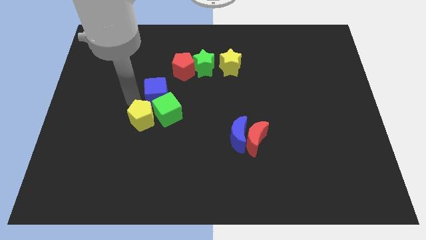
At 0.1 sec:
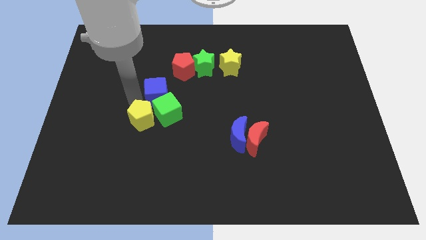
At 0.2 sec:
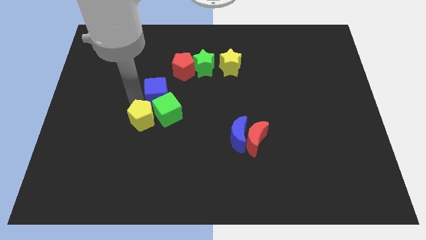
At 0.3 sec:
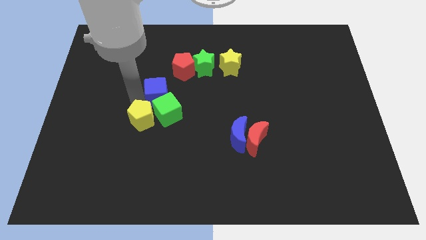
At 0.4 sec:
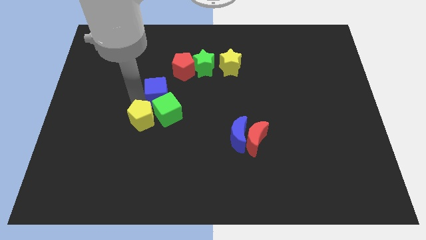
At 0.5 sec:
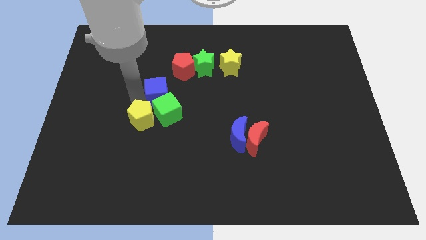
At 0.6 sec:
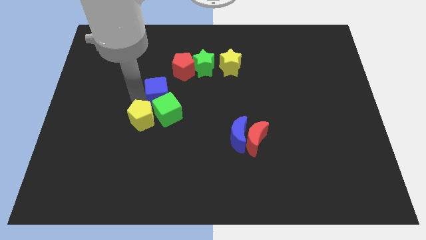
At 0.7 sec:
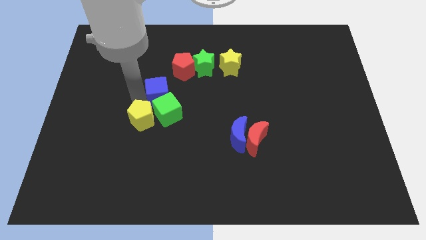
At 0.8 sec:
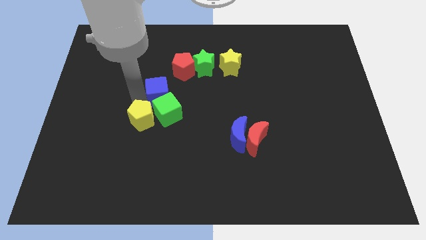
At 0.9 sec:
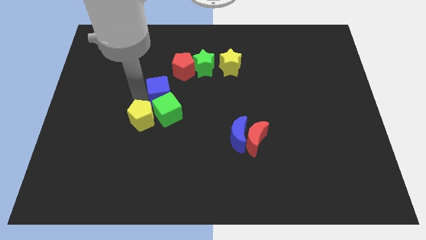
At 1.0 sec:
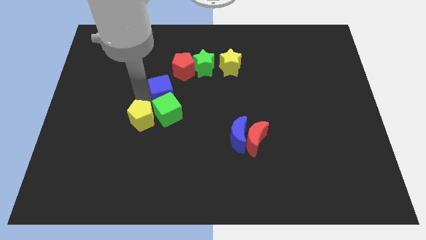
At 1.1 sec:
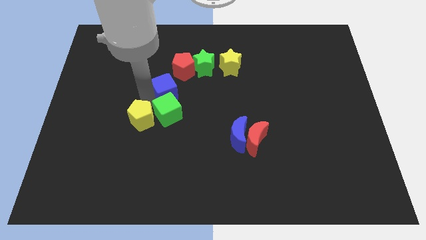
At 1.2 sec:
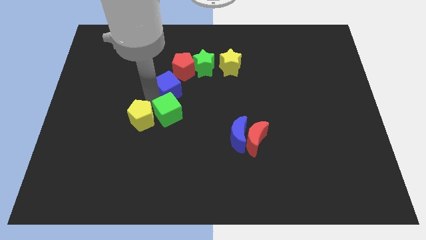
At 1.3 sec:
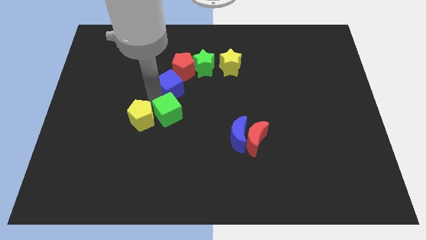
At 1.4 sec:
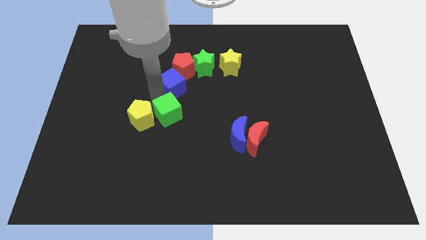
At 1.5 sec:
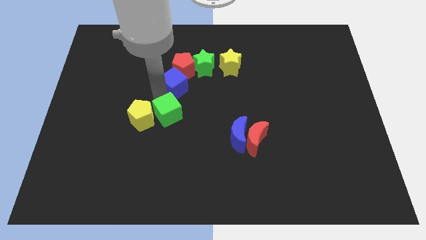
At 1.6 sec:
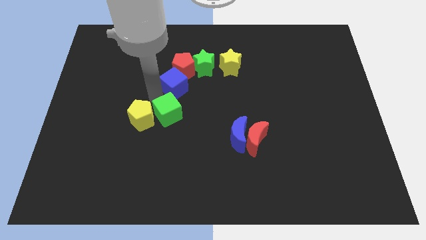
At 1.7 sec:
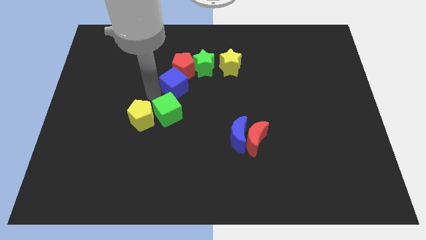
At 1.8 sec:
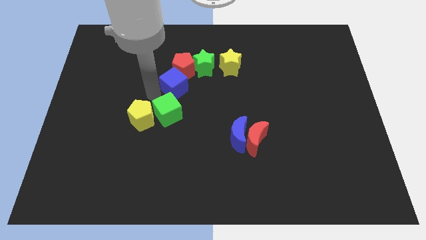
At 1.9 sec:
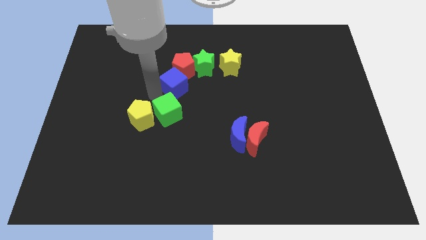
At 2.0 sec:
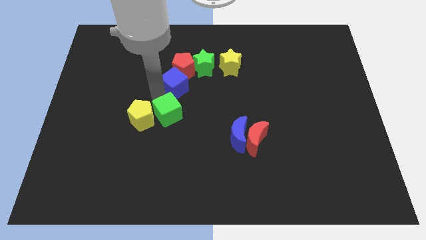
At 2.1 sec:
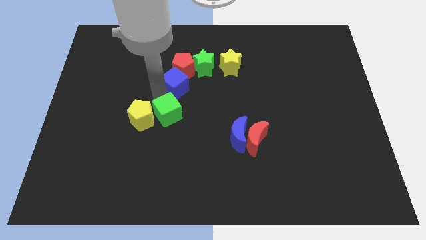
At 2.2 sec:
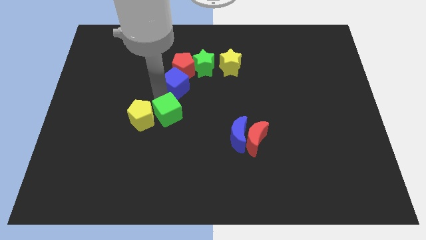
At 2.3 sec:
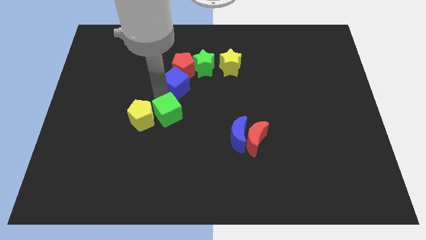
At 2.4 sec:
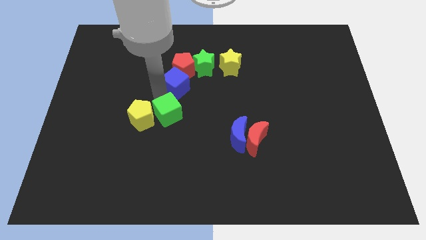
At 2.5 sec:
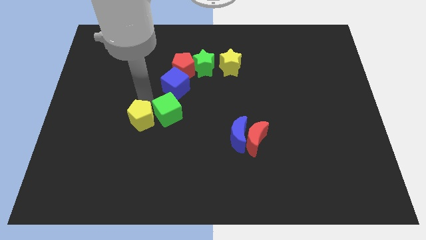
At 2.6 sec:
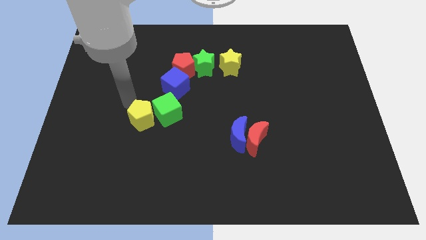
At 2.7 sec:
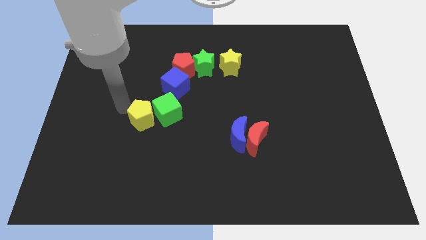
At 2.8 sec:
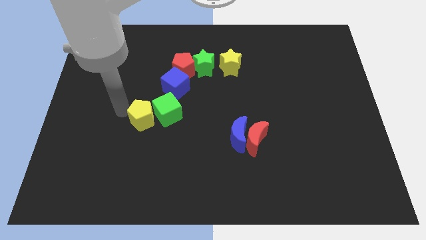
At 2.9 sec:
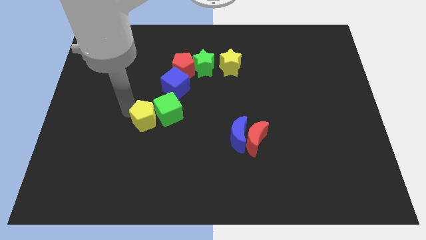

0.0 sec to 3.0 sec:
move the blue cube left below the red pentagon

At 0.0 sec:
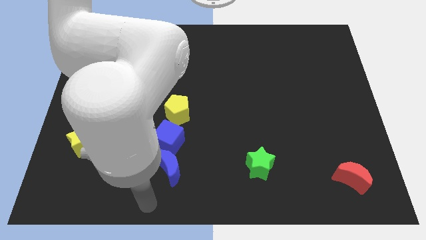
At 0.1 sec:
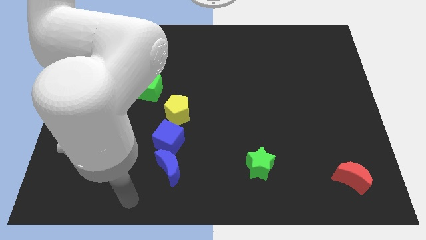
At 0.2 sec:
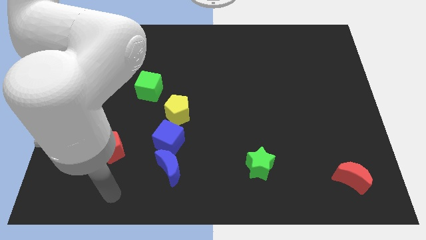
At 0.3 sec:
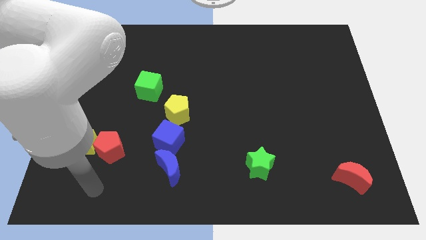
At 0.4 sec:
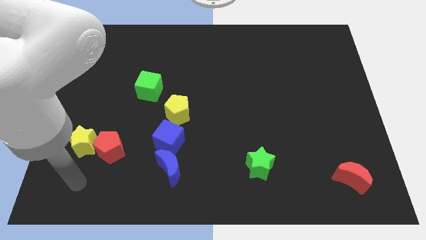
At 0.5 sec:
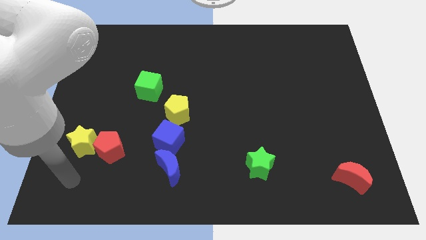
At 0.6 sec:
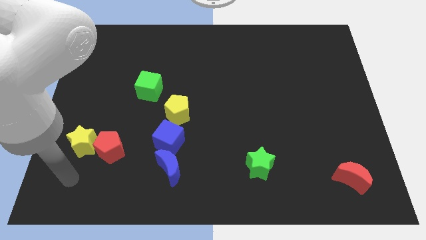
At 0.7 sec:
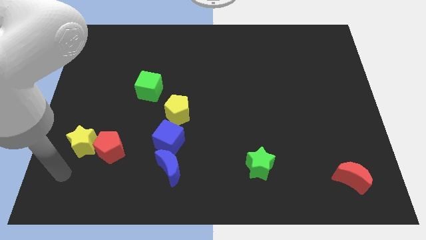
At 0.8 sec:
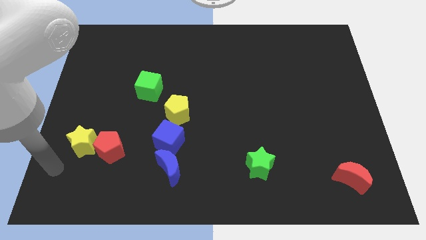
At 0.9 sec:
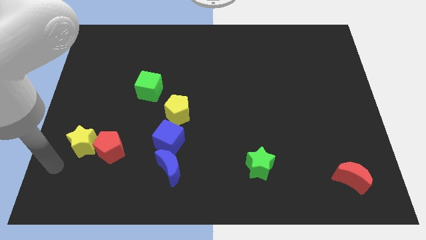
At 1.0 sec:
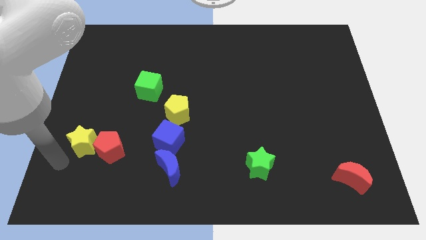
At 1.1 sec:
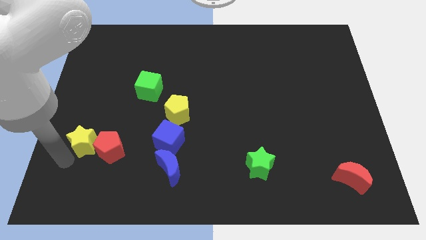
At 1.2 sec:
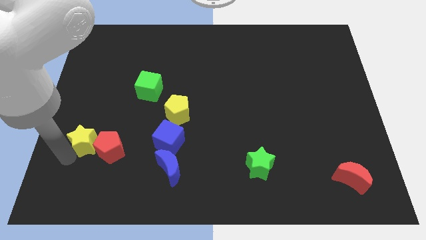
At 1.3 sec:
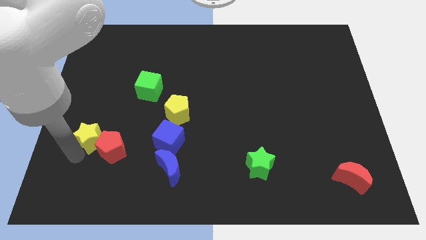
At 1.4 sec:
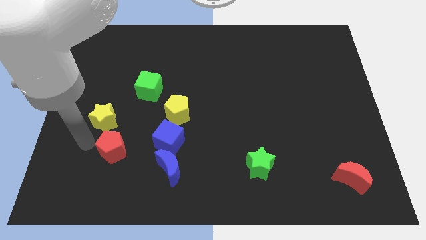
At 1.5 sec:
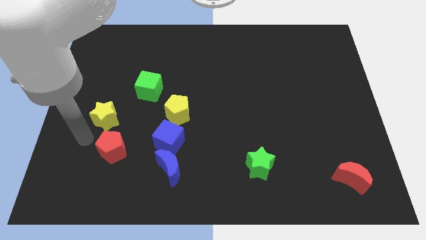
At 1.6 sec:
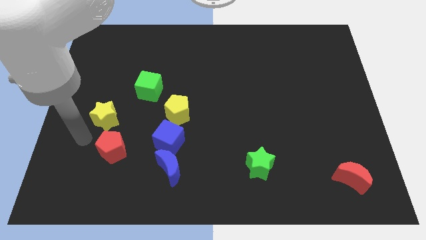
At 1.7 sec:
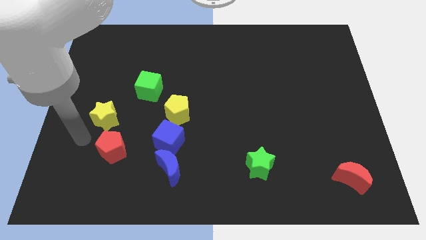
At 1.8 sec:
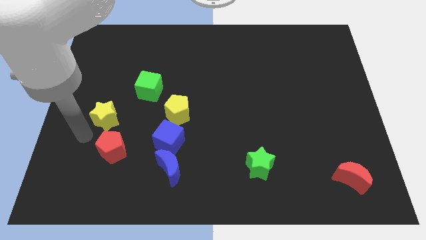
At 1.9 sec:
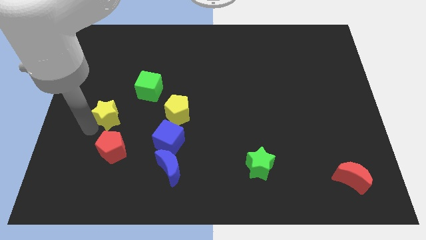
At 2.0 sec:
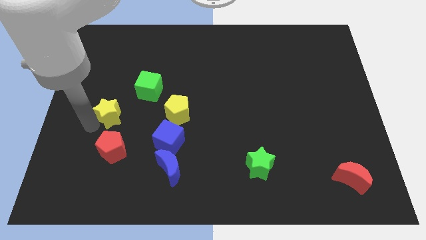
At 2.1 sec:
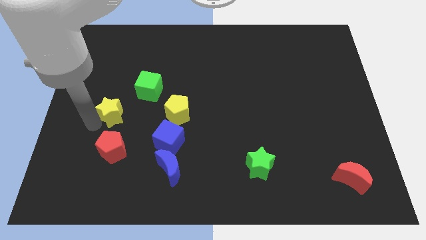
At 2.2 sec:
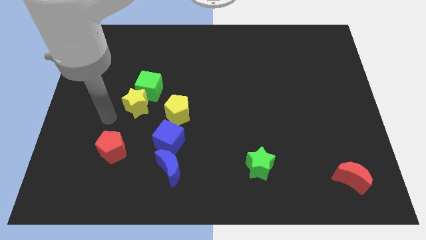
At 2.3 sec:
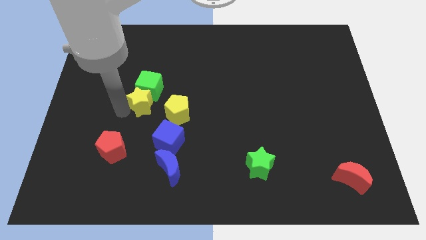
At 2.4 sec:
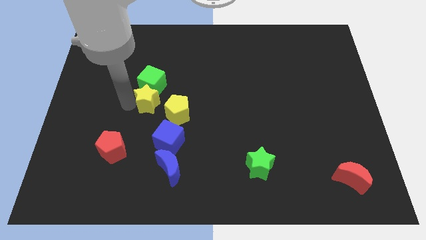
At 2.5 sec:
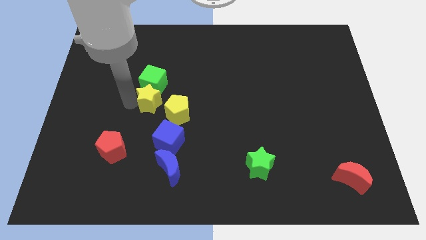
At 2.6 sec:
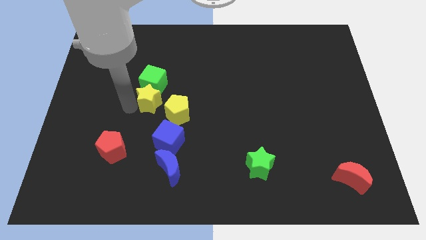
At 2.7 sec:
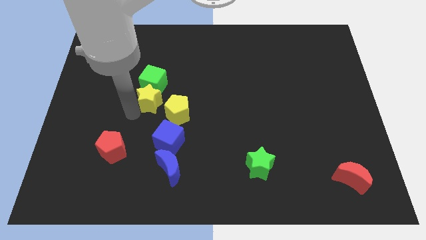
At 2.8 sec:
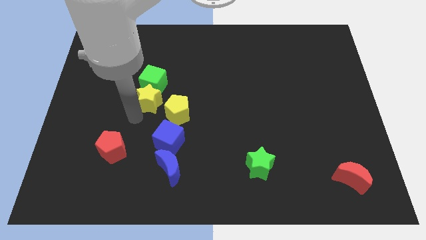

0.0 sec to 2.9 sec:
push the yellow star into the green cube

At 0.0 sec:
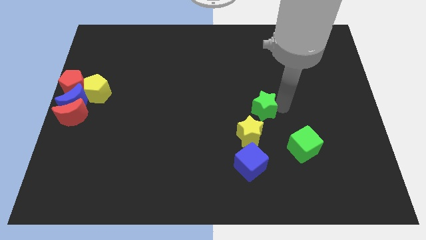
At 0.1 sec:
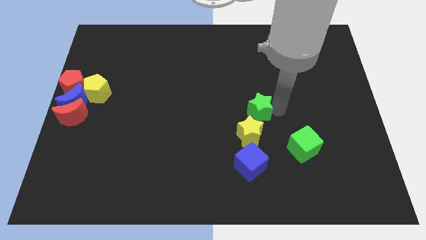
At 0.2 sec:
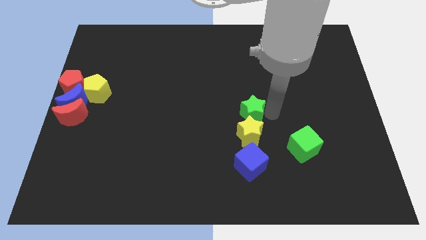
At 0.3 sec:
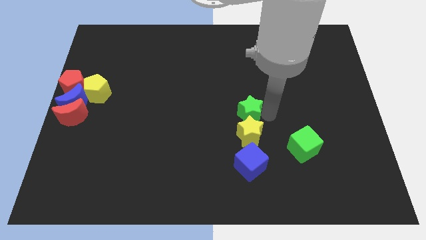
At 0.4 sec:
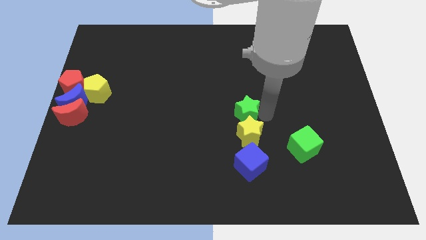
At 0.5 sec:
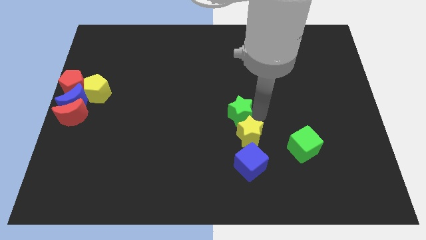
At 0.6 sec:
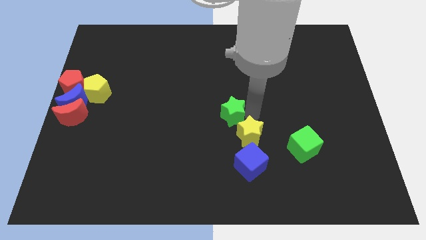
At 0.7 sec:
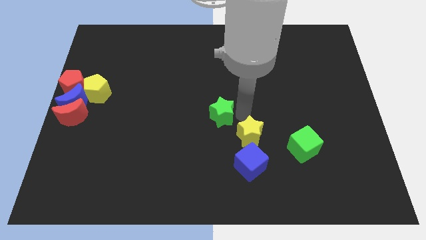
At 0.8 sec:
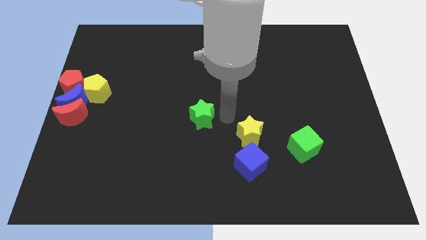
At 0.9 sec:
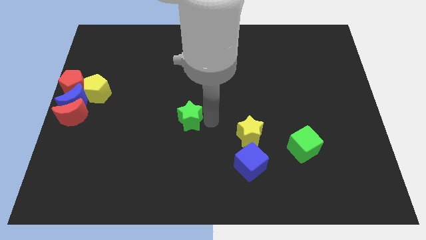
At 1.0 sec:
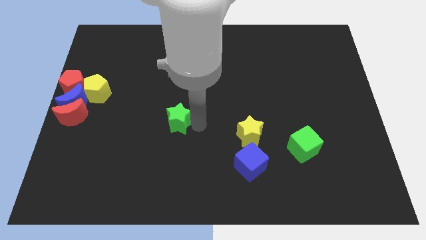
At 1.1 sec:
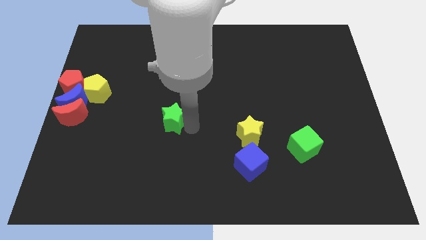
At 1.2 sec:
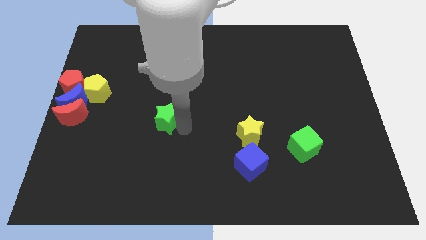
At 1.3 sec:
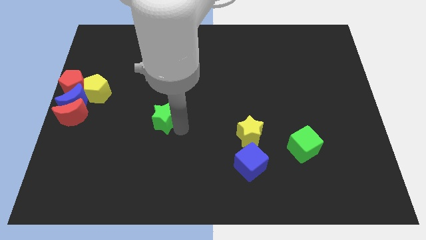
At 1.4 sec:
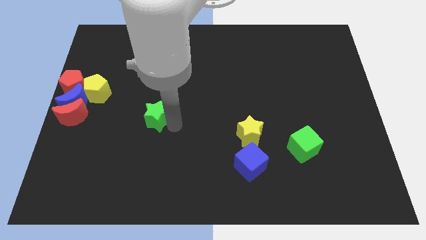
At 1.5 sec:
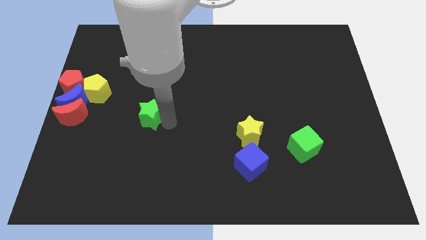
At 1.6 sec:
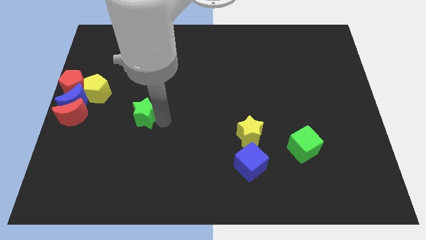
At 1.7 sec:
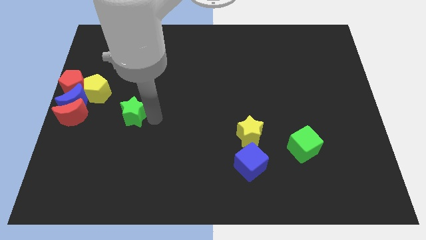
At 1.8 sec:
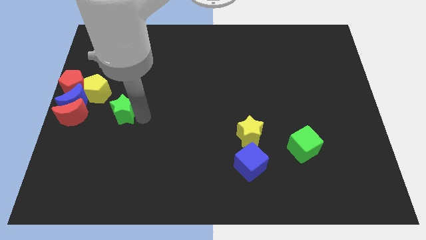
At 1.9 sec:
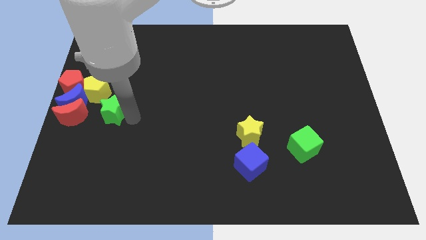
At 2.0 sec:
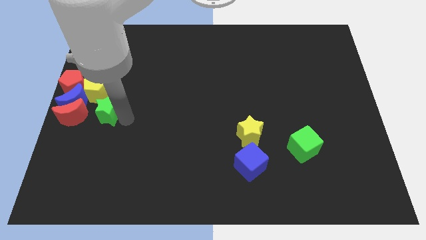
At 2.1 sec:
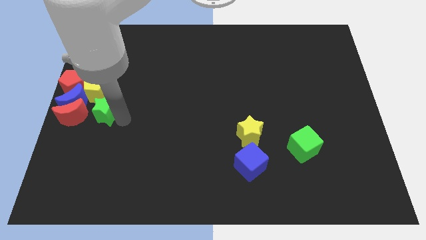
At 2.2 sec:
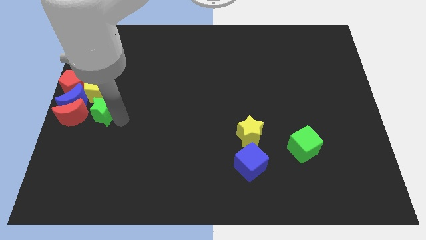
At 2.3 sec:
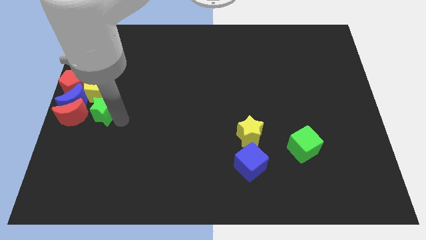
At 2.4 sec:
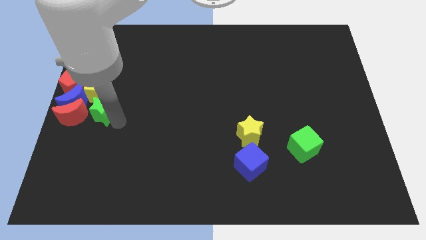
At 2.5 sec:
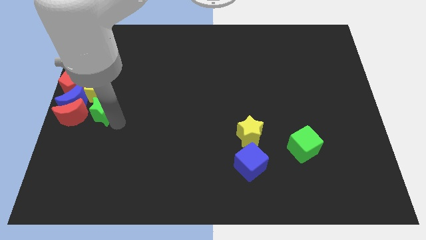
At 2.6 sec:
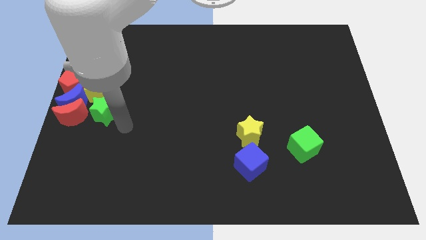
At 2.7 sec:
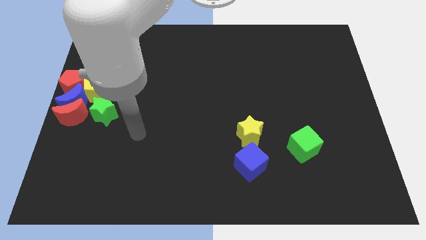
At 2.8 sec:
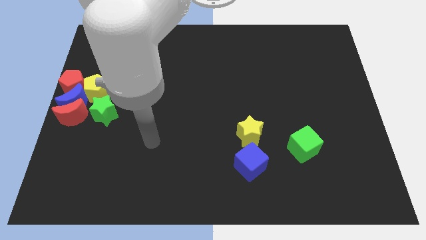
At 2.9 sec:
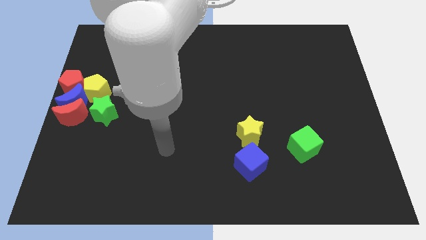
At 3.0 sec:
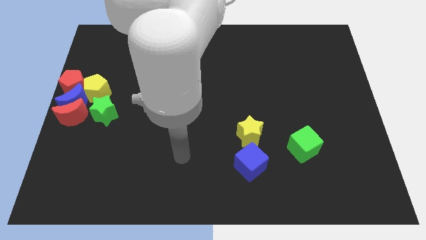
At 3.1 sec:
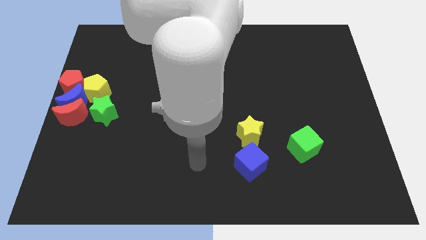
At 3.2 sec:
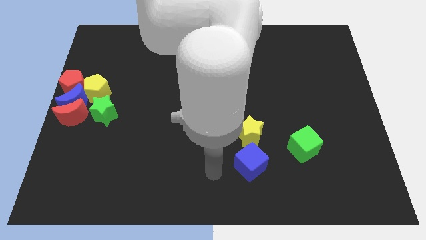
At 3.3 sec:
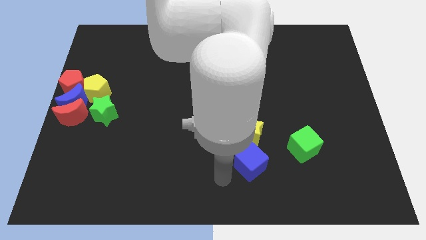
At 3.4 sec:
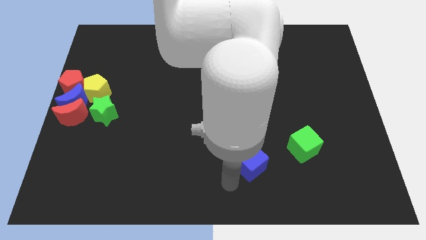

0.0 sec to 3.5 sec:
push the green star to the right side of the red crescent
